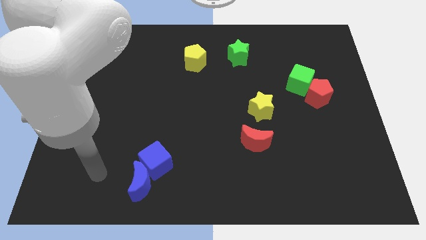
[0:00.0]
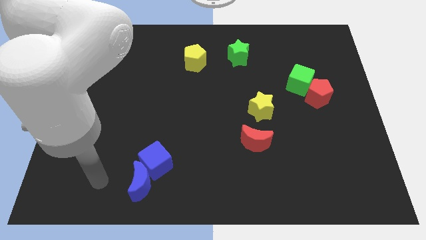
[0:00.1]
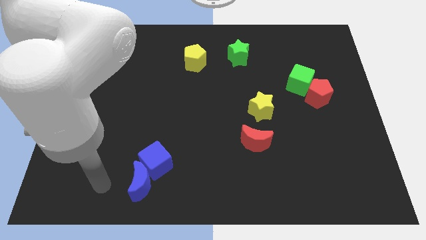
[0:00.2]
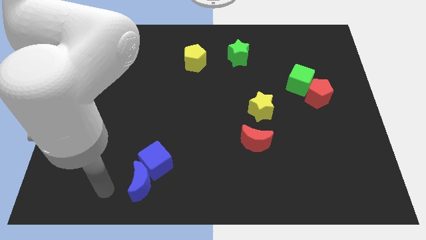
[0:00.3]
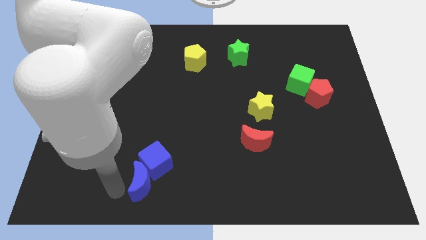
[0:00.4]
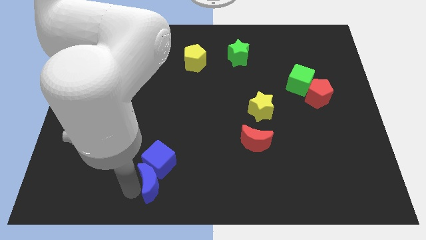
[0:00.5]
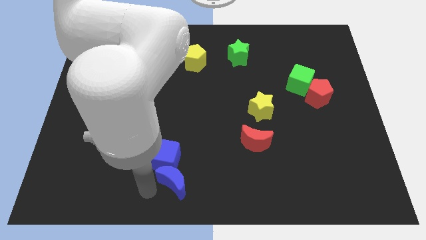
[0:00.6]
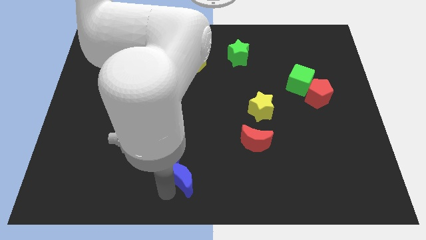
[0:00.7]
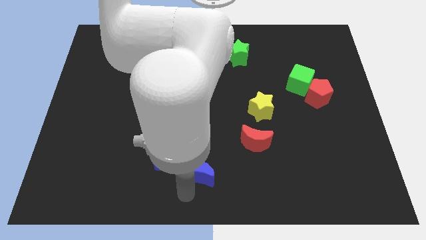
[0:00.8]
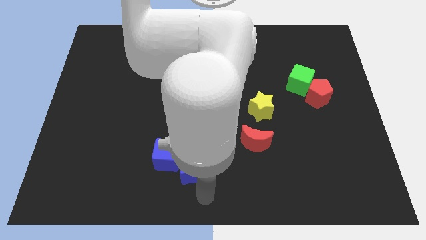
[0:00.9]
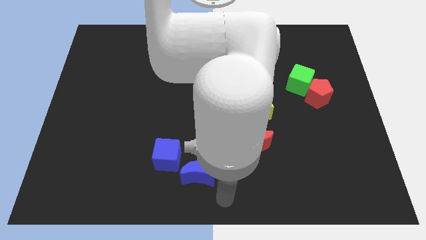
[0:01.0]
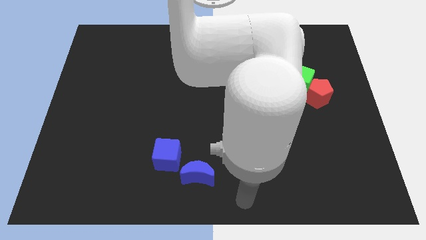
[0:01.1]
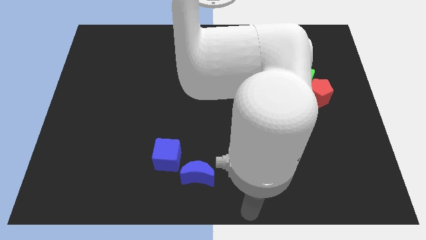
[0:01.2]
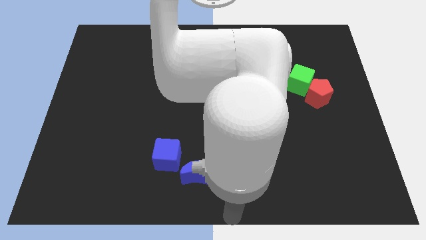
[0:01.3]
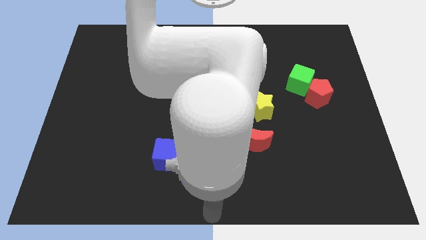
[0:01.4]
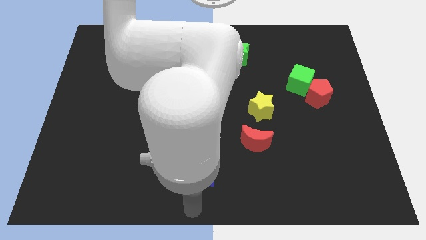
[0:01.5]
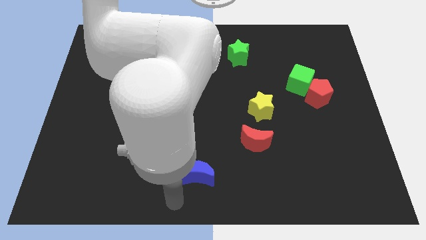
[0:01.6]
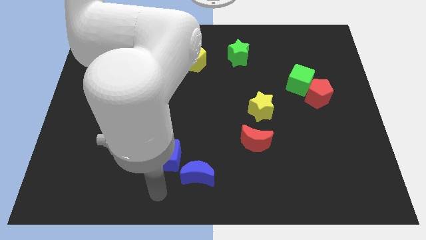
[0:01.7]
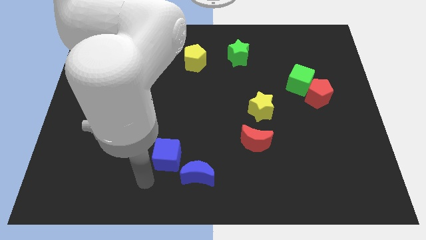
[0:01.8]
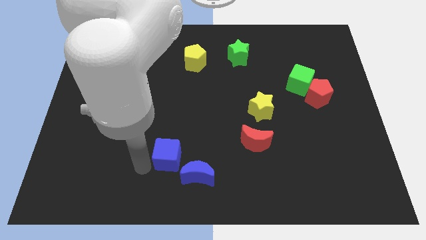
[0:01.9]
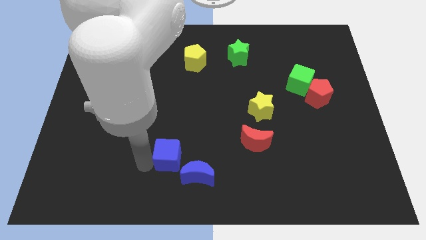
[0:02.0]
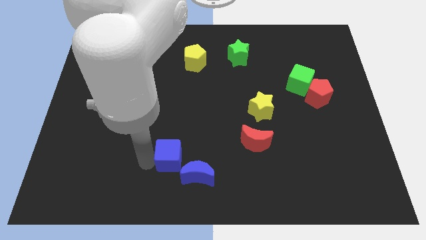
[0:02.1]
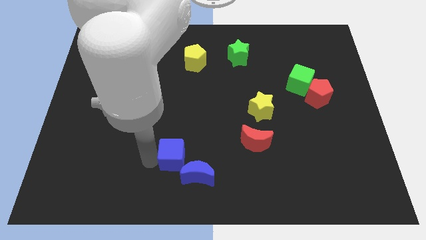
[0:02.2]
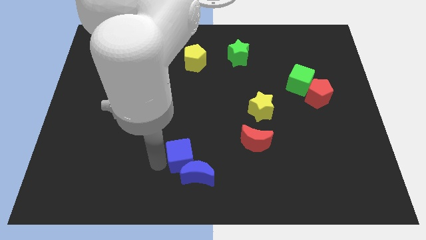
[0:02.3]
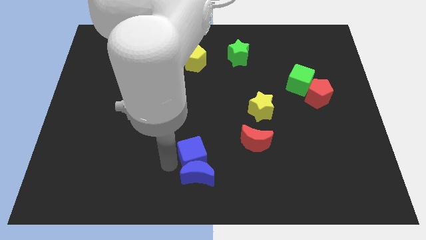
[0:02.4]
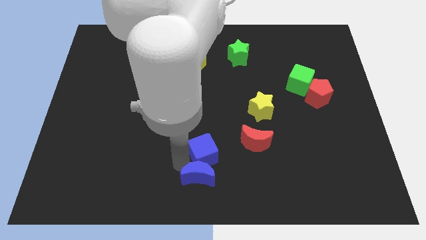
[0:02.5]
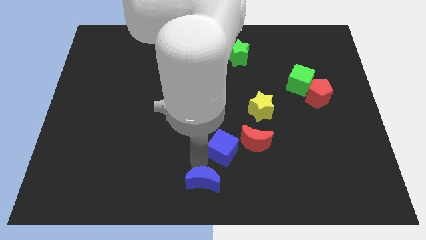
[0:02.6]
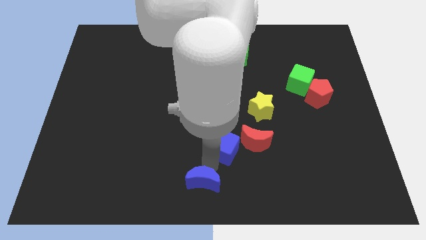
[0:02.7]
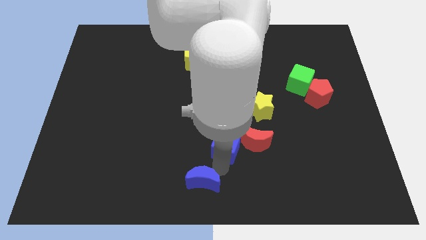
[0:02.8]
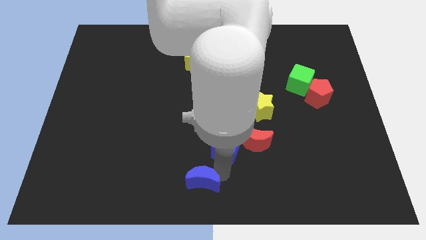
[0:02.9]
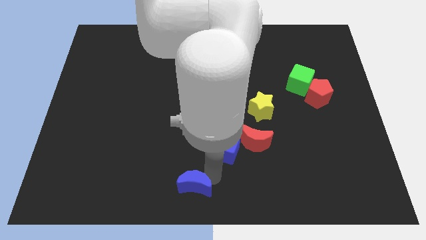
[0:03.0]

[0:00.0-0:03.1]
separate the blue blocks from each other

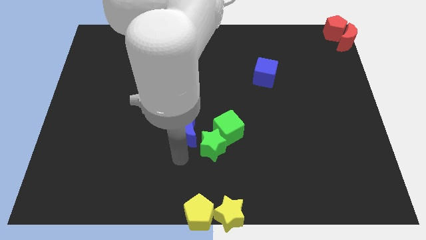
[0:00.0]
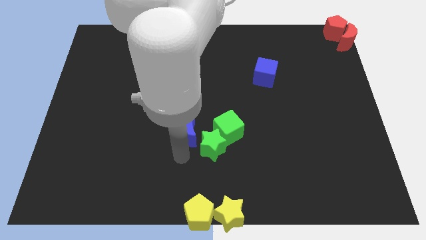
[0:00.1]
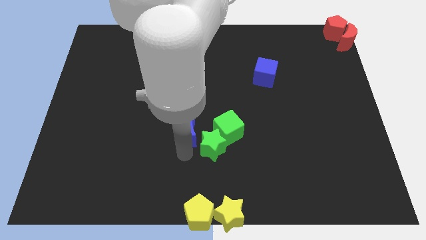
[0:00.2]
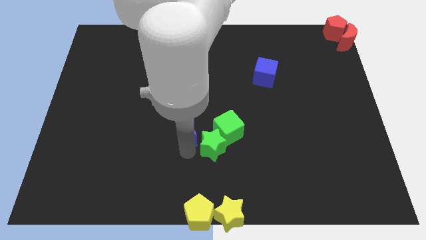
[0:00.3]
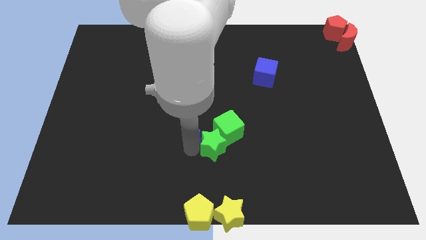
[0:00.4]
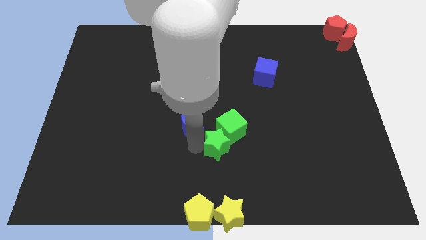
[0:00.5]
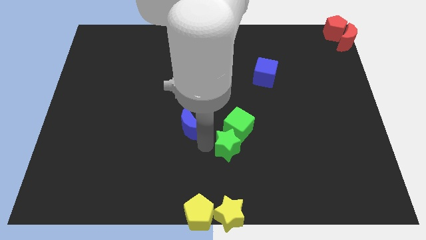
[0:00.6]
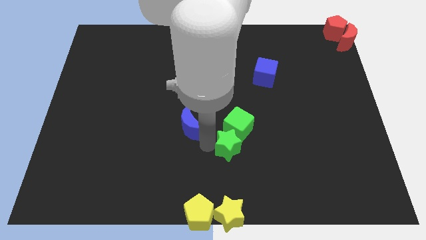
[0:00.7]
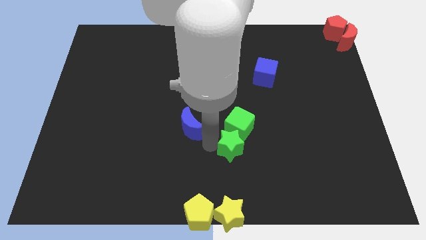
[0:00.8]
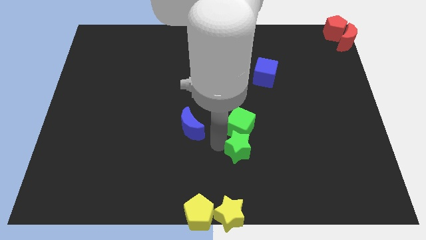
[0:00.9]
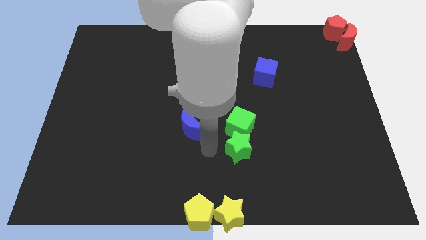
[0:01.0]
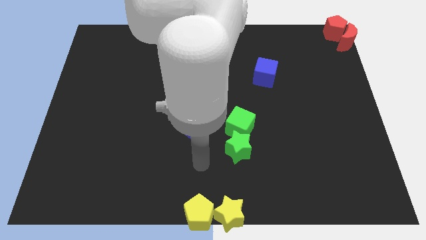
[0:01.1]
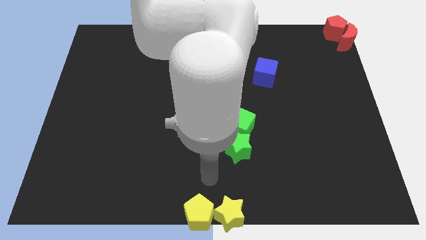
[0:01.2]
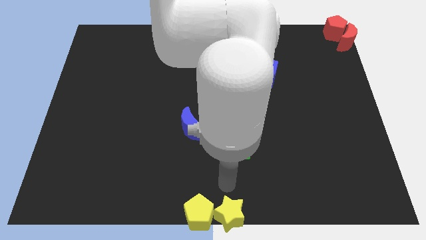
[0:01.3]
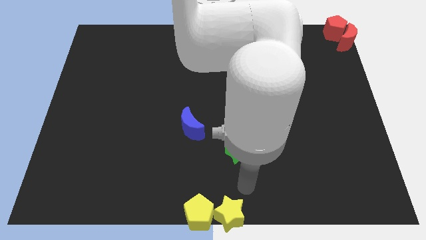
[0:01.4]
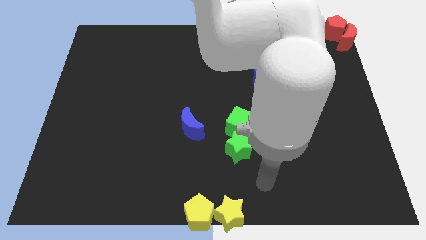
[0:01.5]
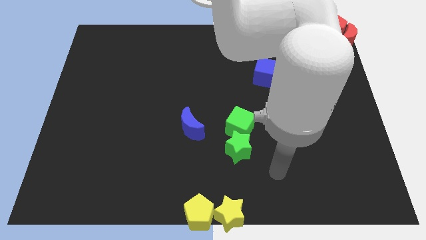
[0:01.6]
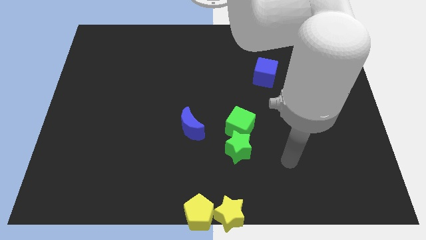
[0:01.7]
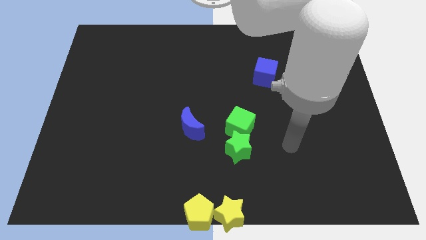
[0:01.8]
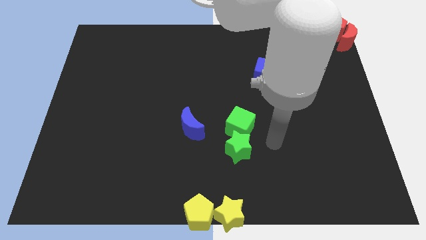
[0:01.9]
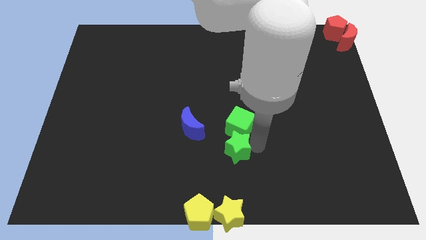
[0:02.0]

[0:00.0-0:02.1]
push the green cube and green star vertically to the top side of the yellow star

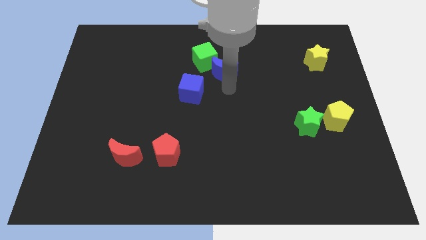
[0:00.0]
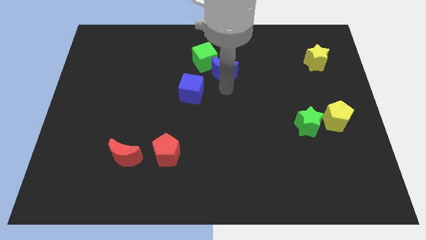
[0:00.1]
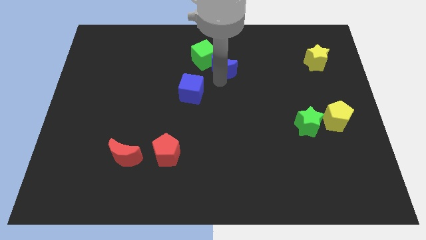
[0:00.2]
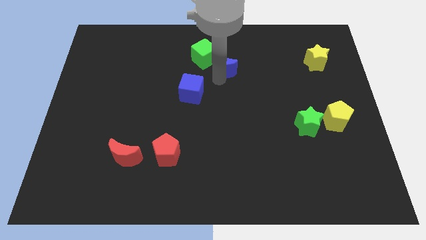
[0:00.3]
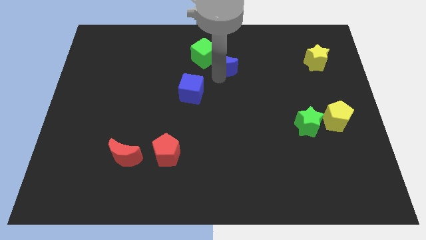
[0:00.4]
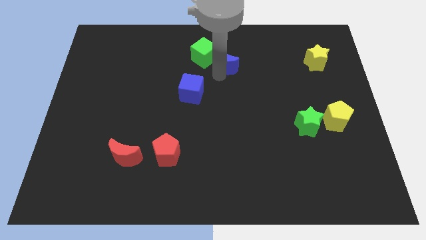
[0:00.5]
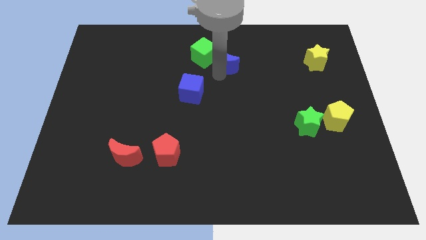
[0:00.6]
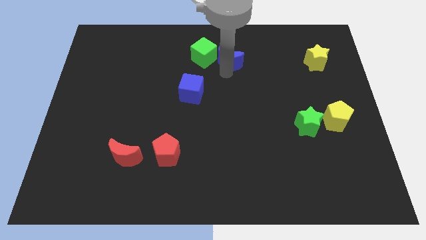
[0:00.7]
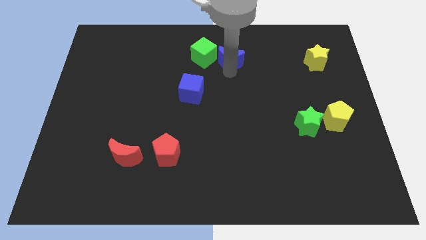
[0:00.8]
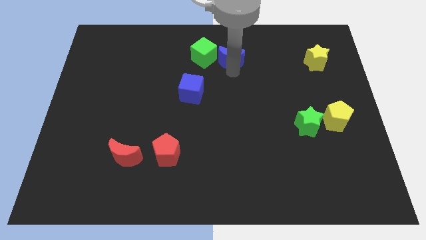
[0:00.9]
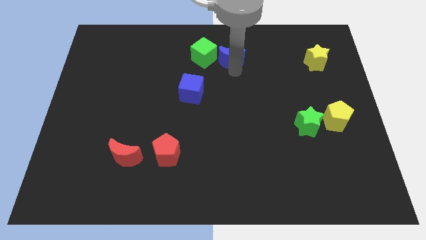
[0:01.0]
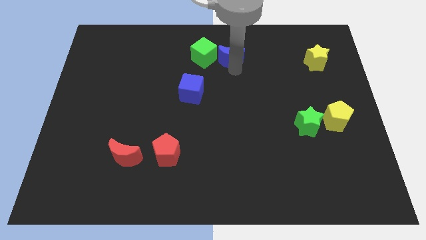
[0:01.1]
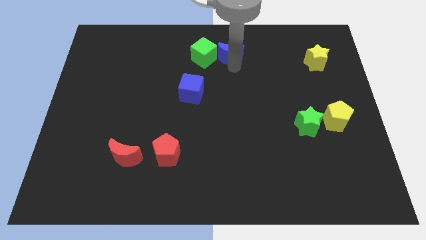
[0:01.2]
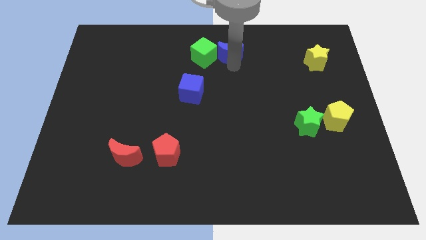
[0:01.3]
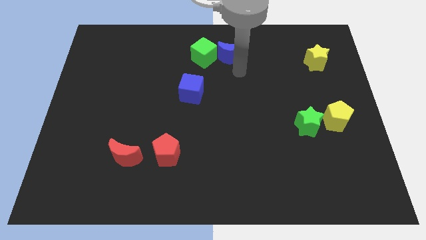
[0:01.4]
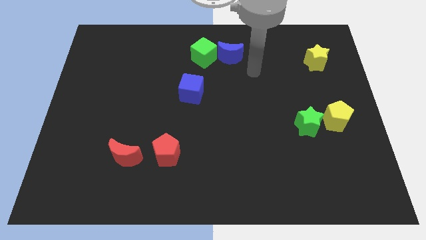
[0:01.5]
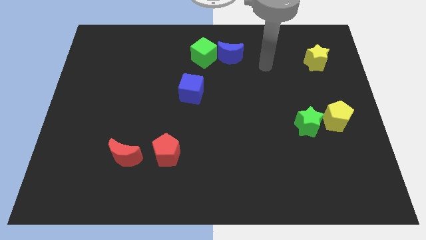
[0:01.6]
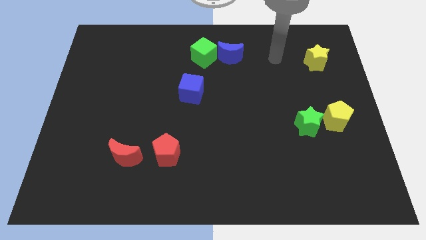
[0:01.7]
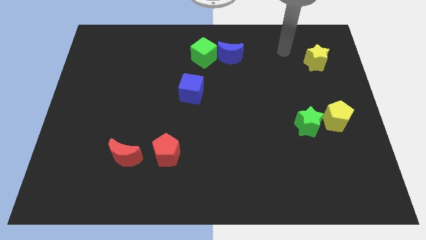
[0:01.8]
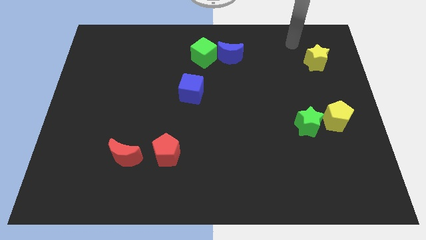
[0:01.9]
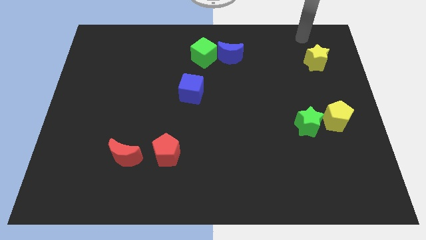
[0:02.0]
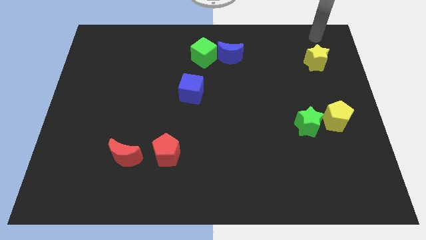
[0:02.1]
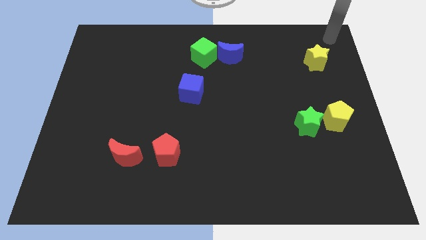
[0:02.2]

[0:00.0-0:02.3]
place the blue moon to the left of the green cube

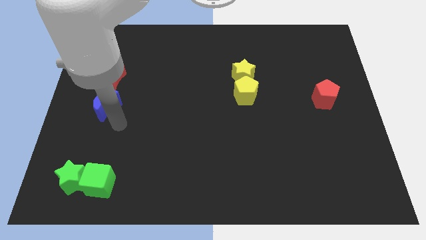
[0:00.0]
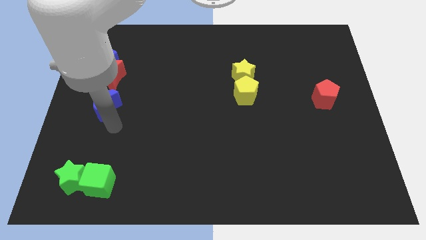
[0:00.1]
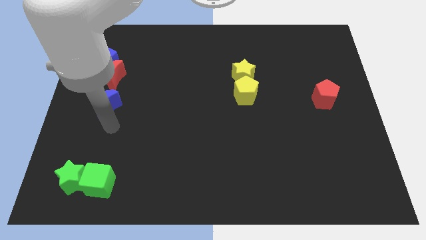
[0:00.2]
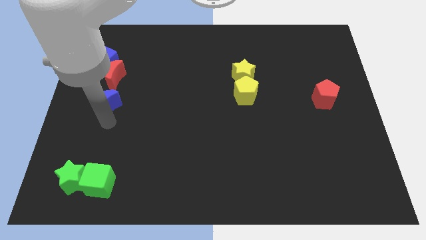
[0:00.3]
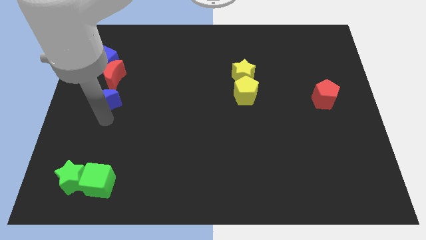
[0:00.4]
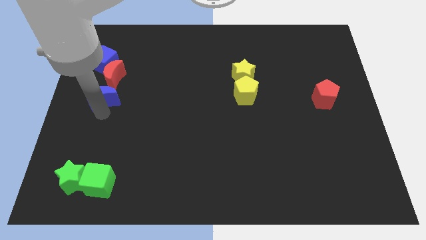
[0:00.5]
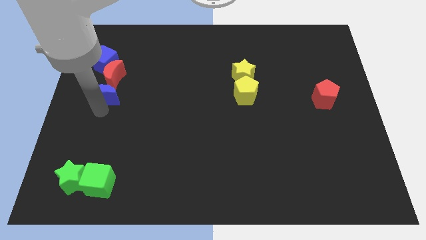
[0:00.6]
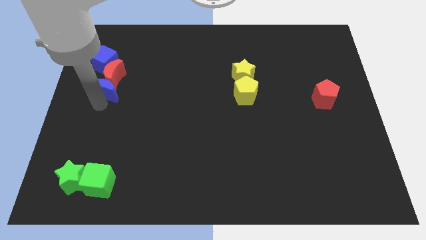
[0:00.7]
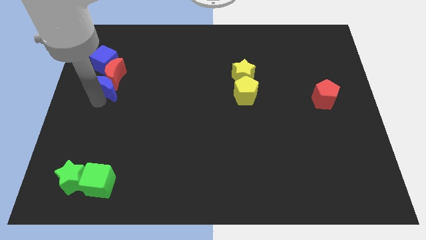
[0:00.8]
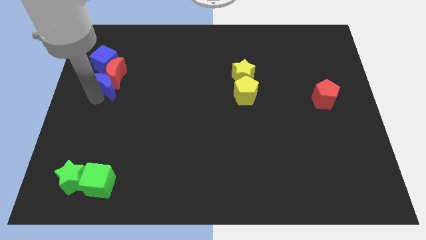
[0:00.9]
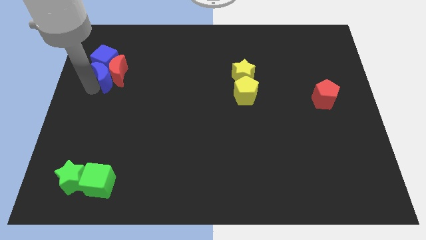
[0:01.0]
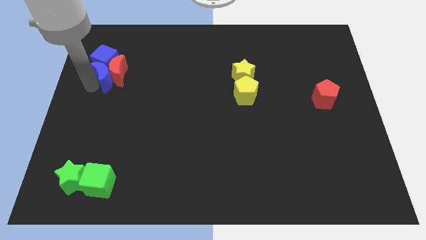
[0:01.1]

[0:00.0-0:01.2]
push the blue moon into red moon

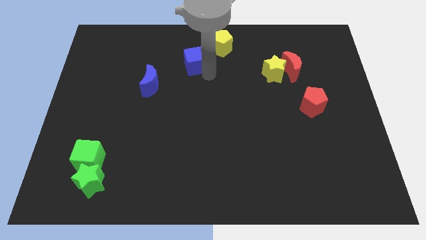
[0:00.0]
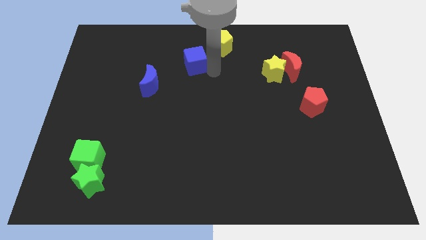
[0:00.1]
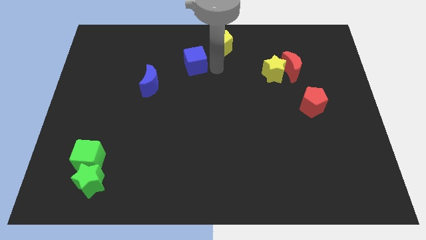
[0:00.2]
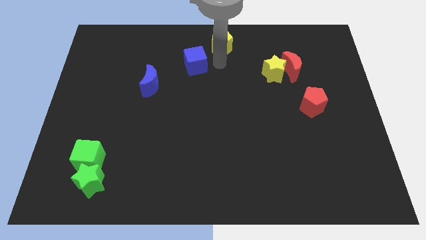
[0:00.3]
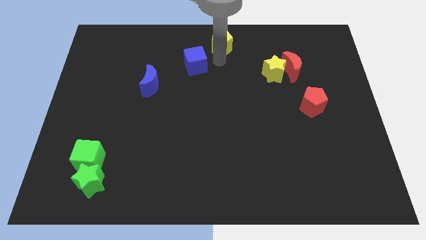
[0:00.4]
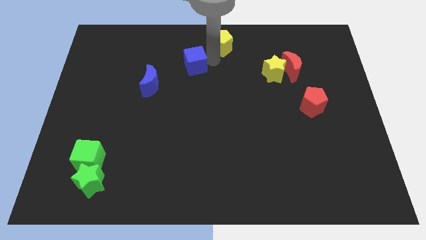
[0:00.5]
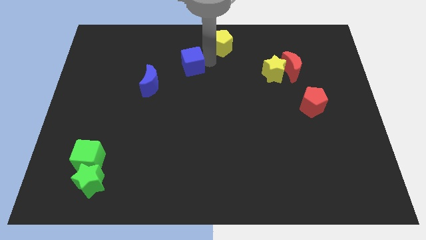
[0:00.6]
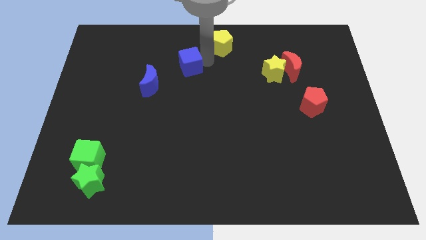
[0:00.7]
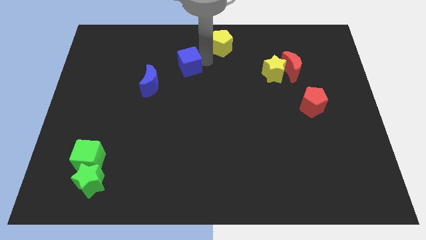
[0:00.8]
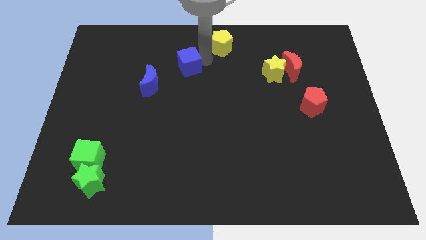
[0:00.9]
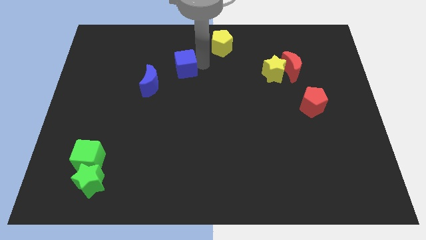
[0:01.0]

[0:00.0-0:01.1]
place the blue cube in between yellow pentagon and blue crescent
